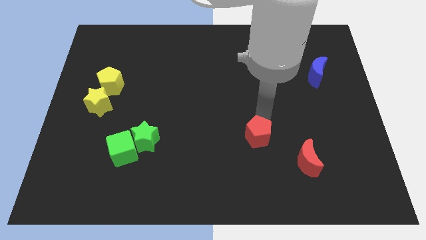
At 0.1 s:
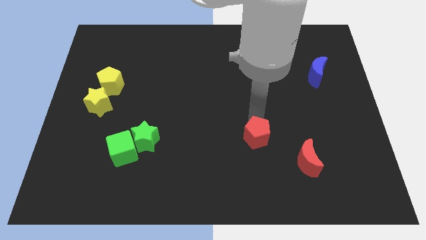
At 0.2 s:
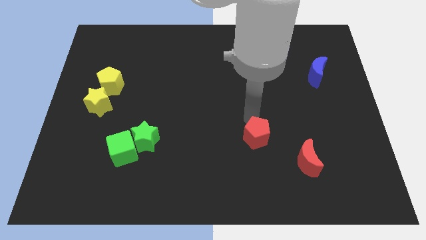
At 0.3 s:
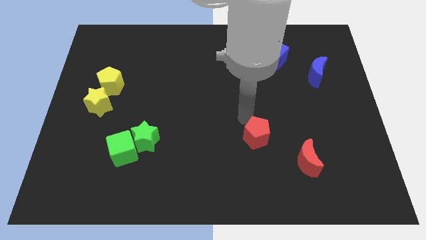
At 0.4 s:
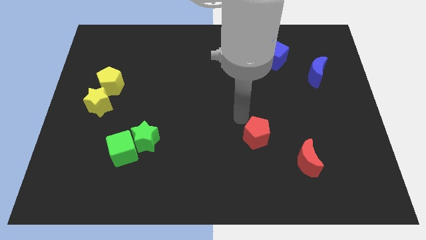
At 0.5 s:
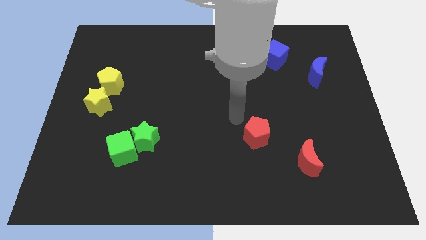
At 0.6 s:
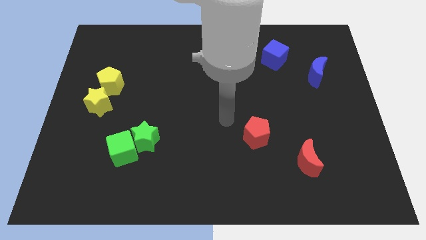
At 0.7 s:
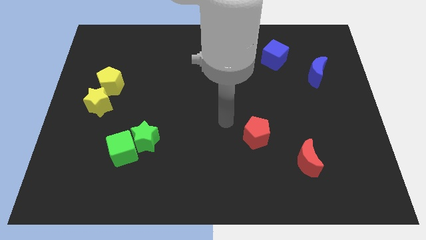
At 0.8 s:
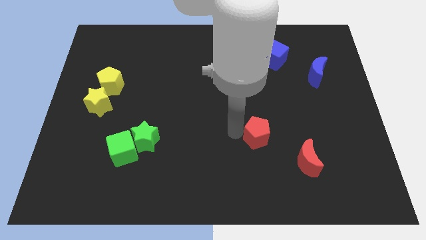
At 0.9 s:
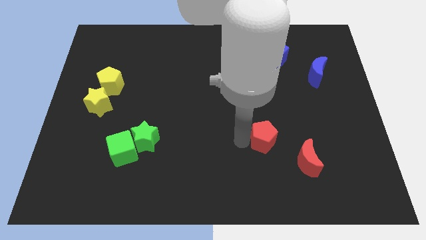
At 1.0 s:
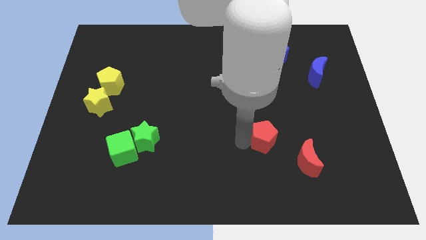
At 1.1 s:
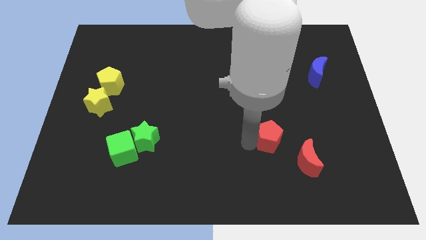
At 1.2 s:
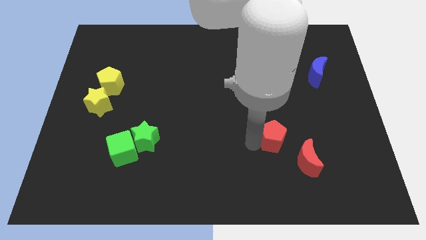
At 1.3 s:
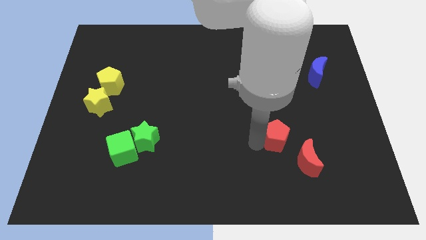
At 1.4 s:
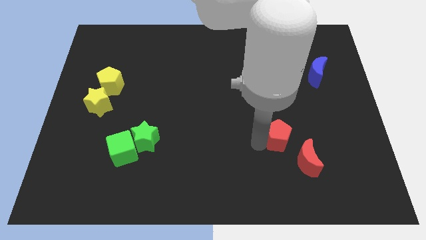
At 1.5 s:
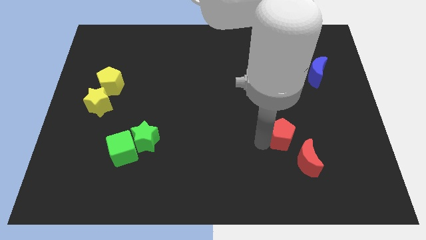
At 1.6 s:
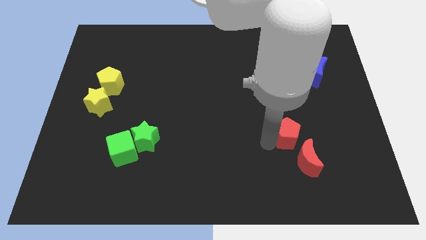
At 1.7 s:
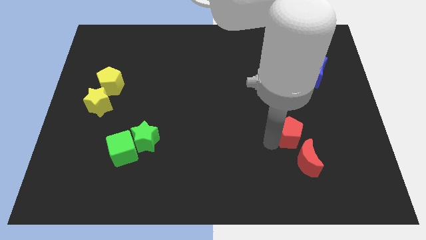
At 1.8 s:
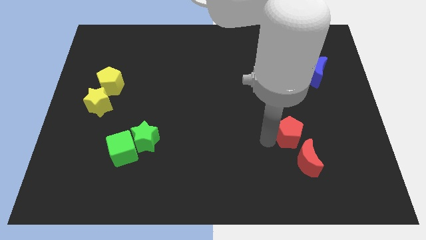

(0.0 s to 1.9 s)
put the red pentagon at the top left side of red moon

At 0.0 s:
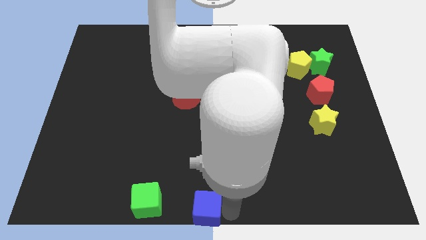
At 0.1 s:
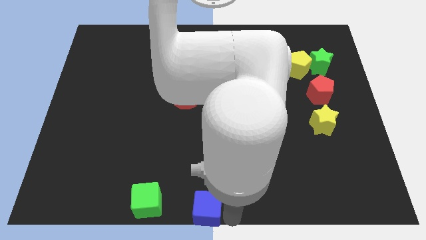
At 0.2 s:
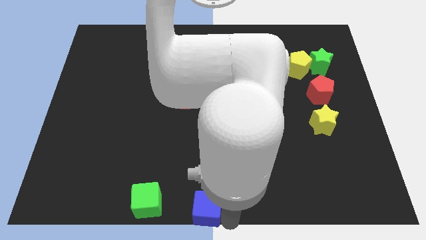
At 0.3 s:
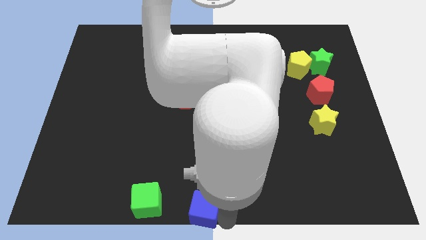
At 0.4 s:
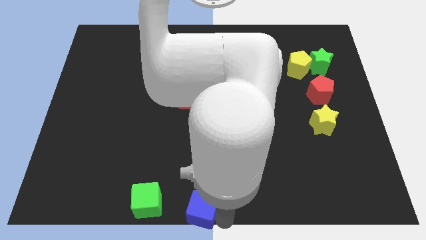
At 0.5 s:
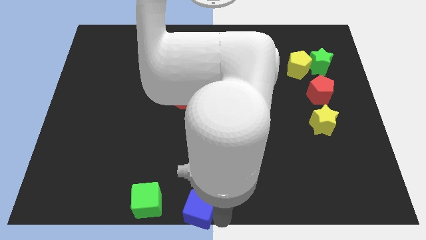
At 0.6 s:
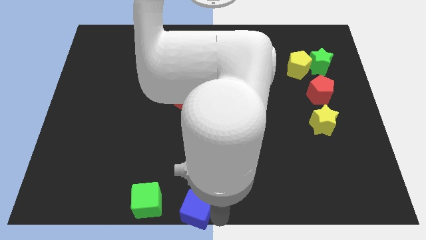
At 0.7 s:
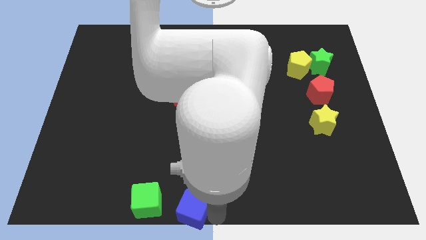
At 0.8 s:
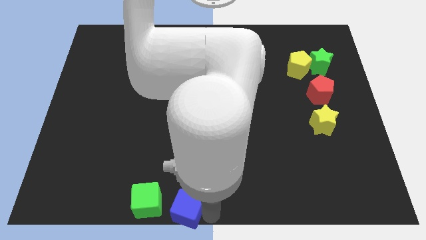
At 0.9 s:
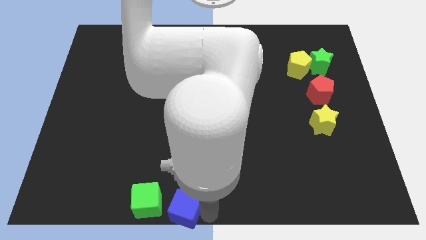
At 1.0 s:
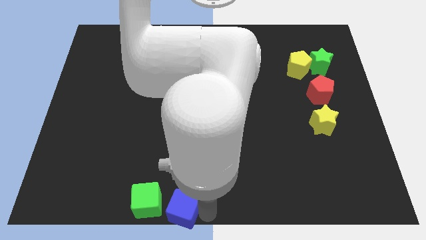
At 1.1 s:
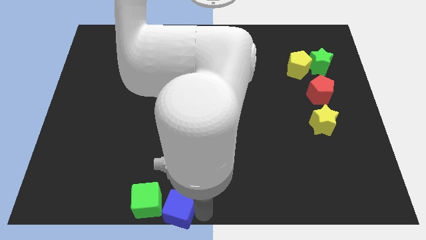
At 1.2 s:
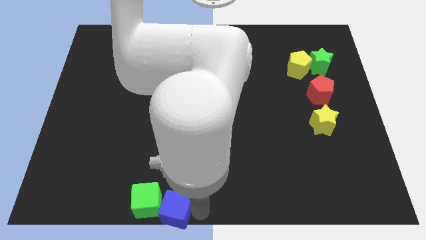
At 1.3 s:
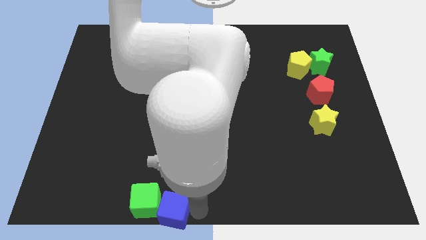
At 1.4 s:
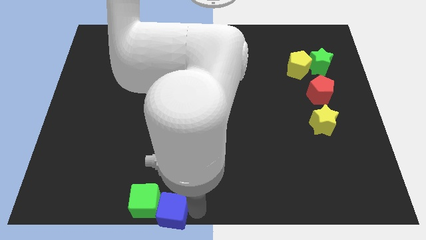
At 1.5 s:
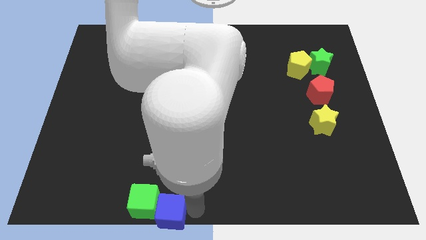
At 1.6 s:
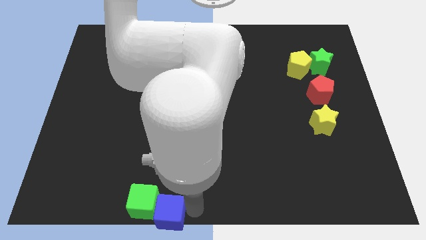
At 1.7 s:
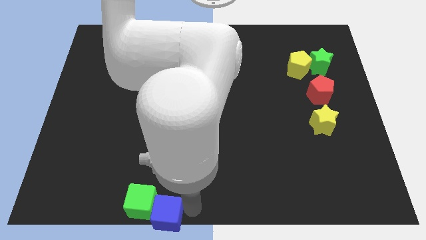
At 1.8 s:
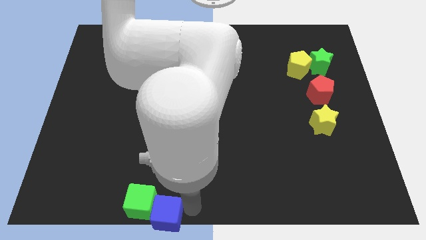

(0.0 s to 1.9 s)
push the blue cube into the green cube

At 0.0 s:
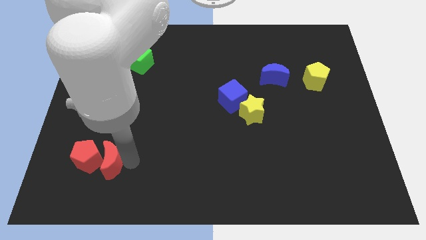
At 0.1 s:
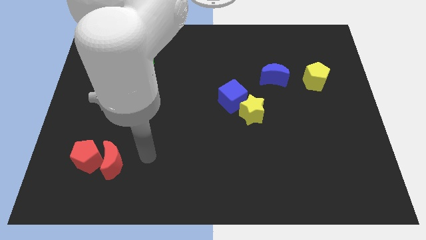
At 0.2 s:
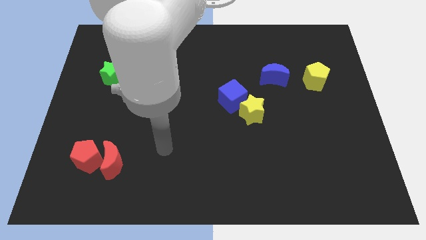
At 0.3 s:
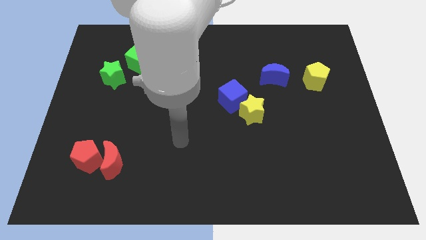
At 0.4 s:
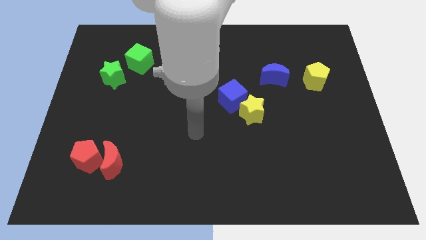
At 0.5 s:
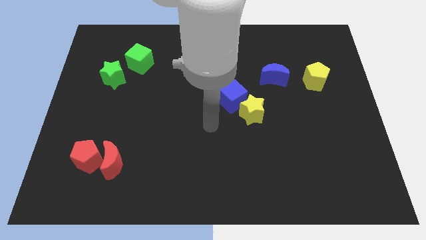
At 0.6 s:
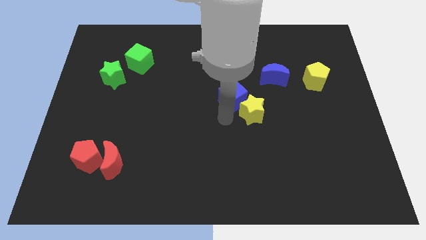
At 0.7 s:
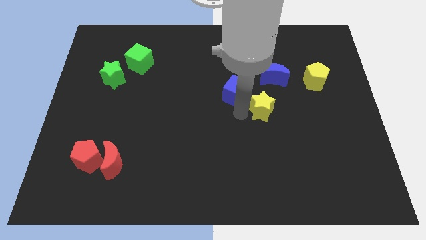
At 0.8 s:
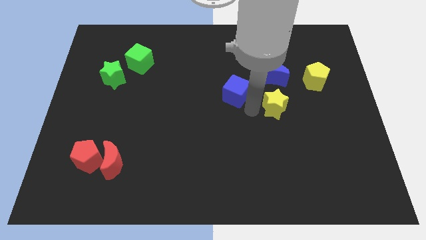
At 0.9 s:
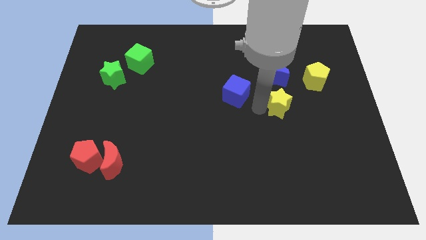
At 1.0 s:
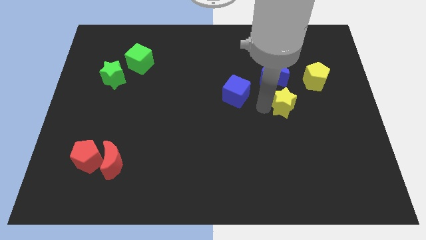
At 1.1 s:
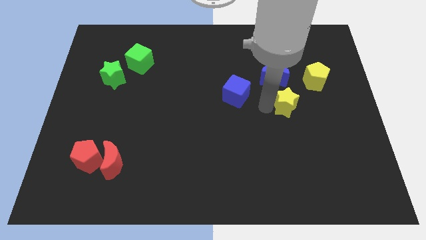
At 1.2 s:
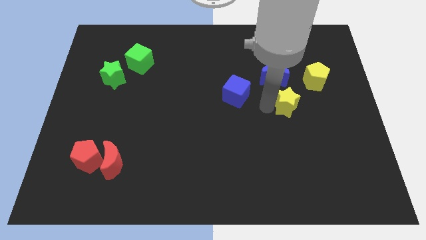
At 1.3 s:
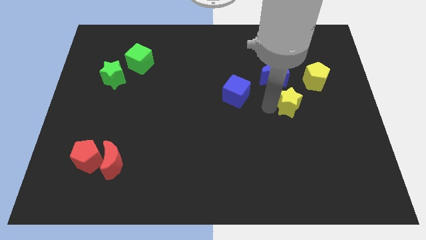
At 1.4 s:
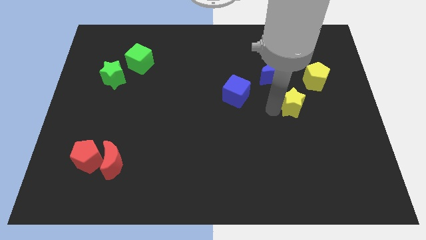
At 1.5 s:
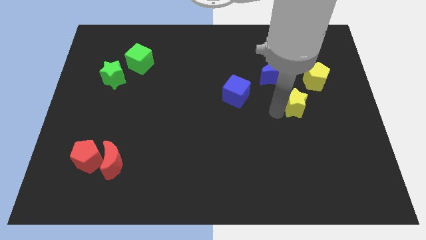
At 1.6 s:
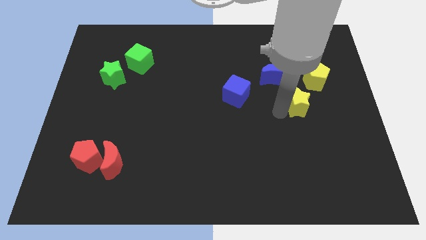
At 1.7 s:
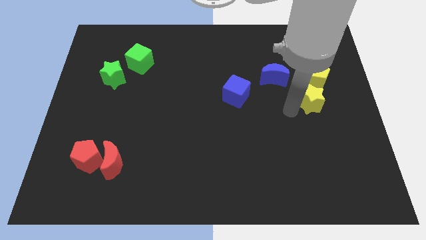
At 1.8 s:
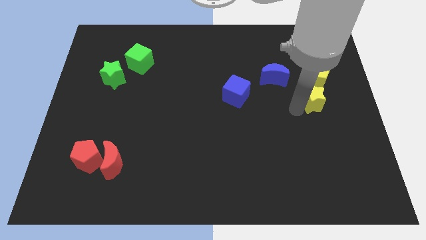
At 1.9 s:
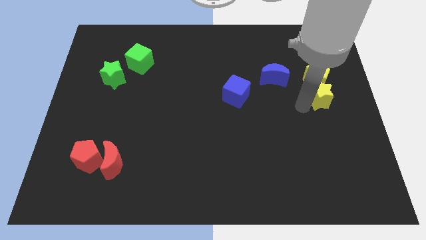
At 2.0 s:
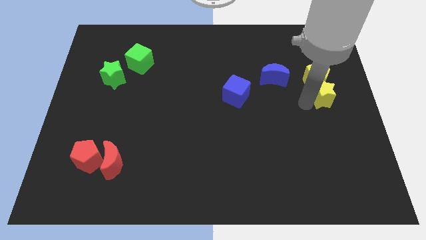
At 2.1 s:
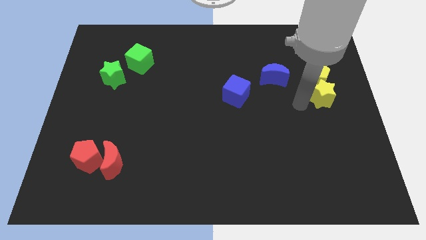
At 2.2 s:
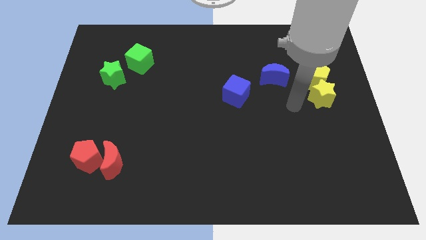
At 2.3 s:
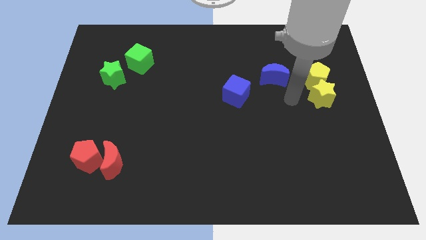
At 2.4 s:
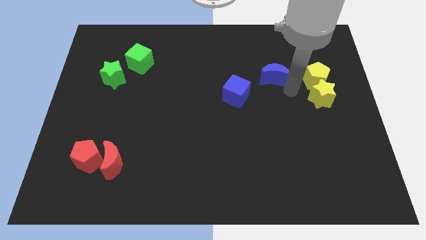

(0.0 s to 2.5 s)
slide the yellow star to the bottom side of the yellow pentagon

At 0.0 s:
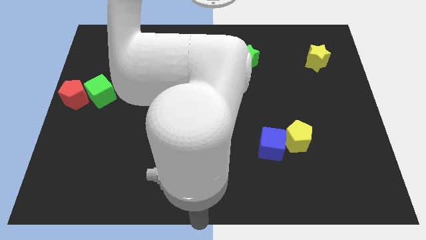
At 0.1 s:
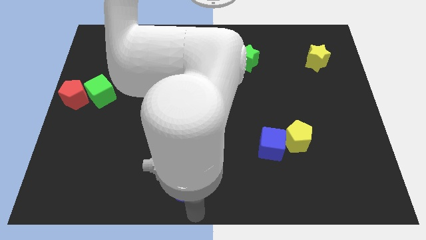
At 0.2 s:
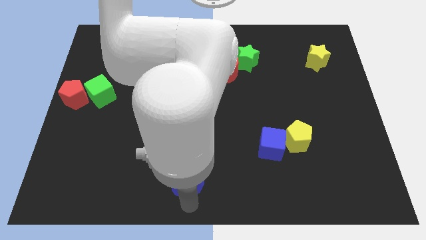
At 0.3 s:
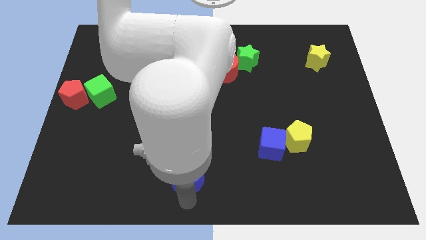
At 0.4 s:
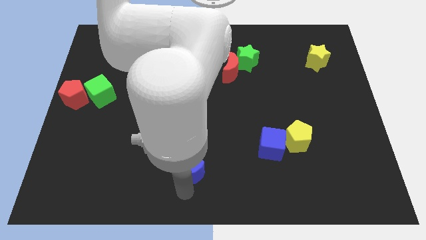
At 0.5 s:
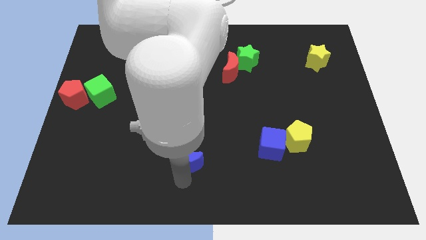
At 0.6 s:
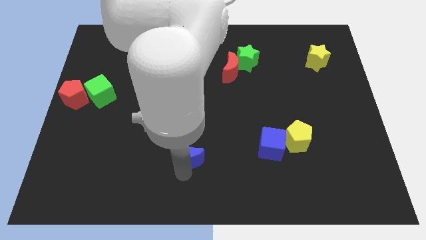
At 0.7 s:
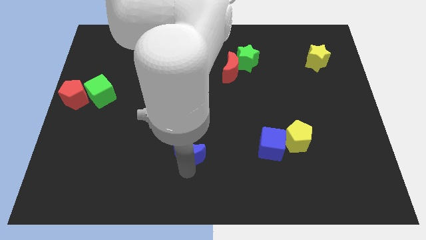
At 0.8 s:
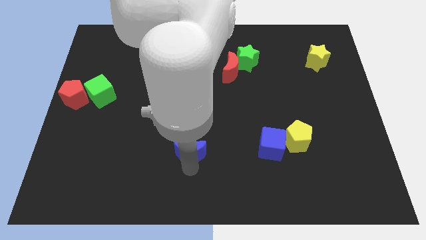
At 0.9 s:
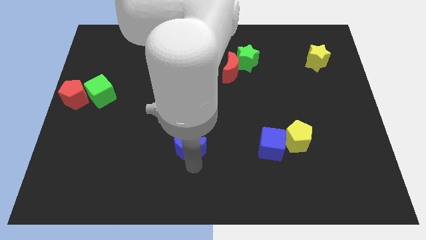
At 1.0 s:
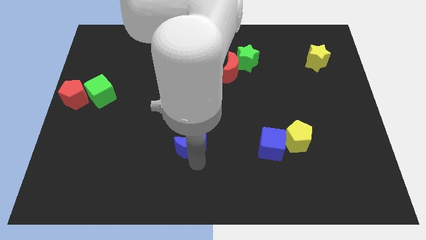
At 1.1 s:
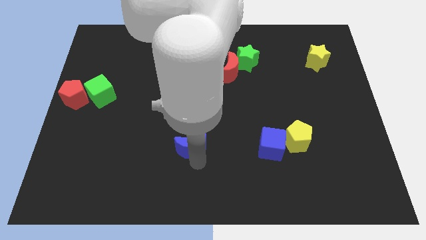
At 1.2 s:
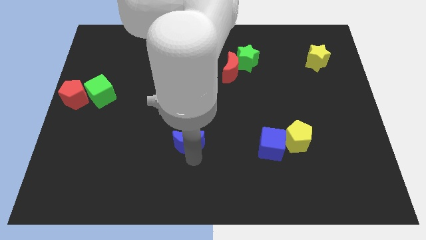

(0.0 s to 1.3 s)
push blue crescent beside blue cube

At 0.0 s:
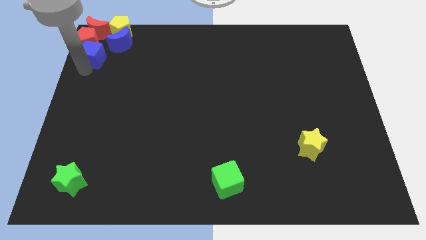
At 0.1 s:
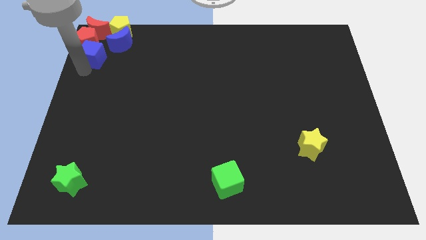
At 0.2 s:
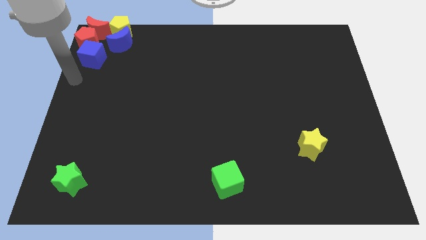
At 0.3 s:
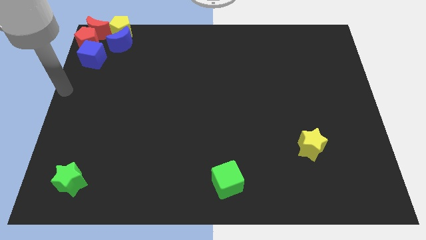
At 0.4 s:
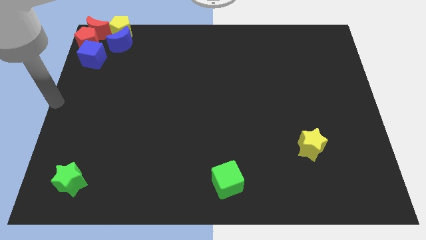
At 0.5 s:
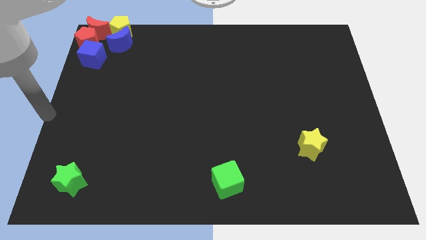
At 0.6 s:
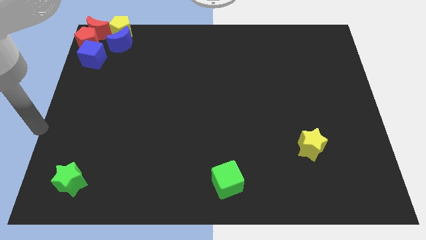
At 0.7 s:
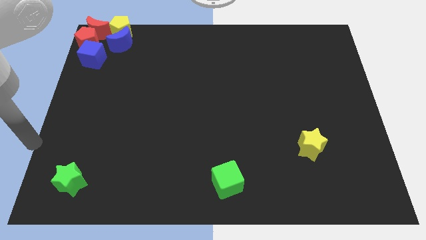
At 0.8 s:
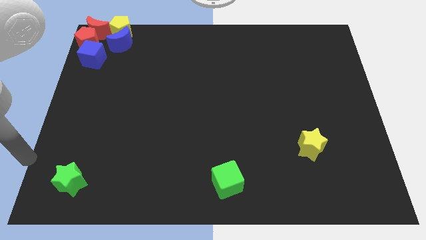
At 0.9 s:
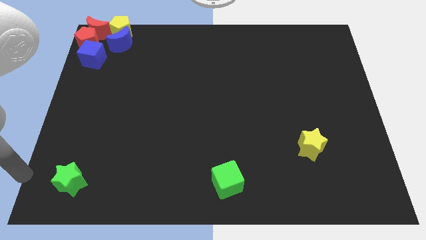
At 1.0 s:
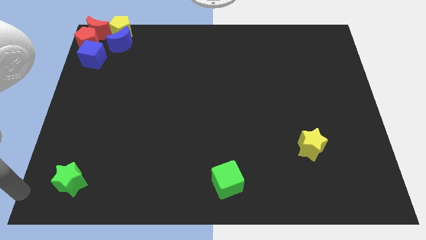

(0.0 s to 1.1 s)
move your arm away from the blue cube
